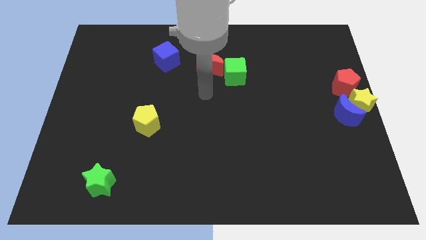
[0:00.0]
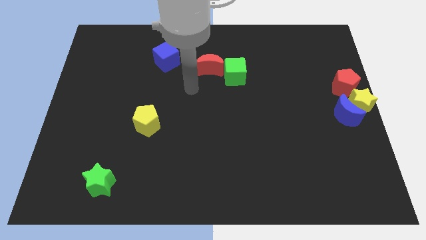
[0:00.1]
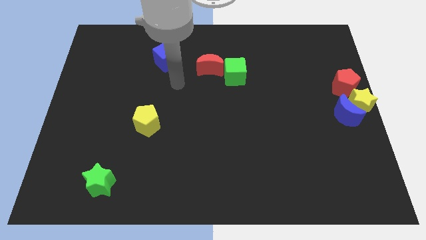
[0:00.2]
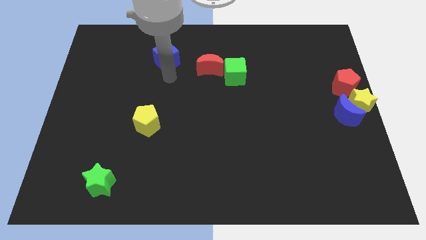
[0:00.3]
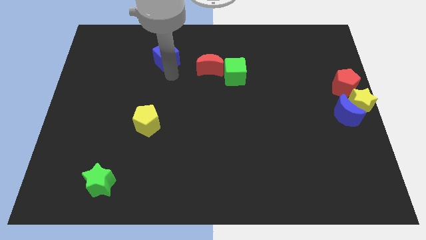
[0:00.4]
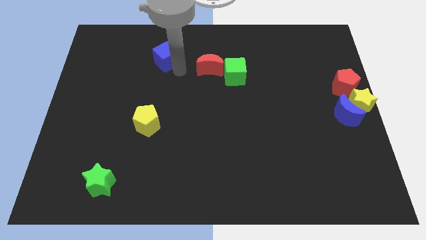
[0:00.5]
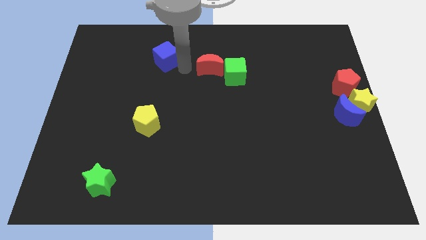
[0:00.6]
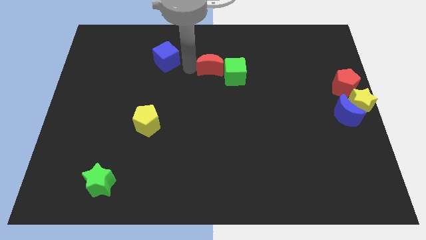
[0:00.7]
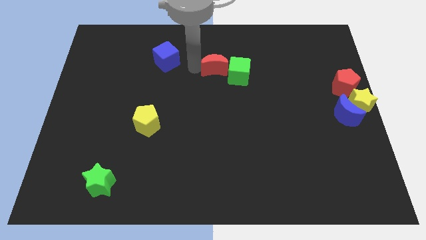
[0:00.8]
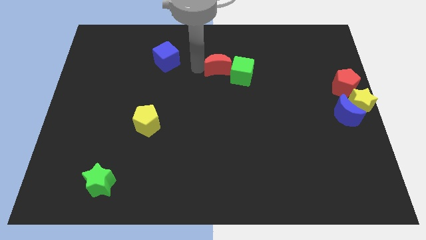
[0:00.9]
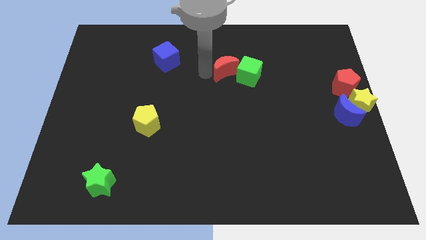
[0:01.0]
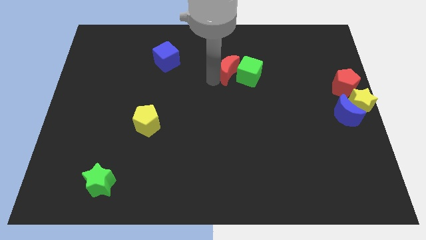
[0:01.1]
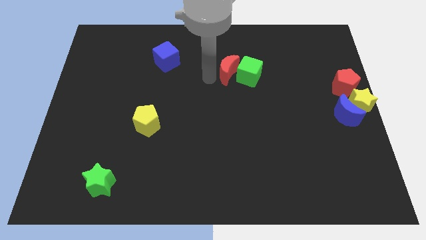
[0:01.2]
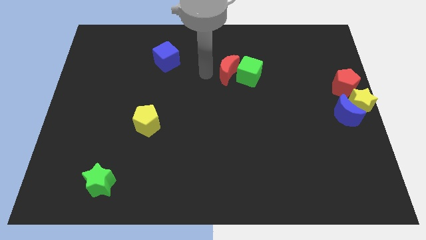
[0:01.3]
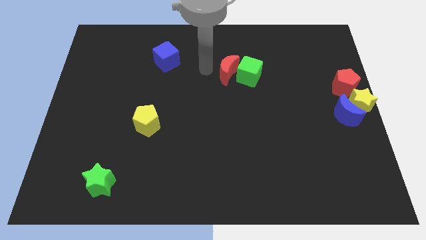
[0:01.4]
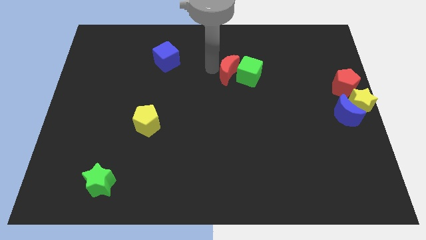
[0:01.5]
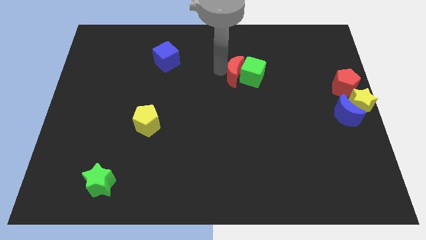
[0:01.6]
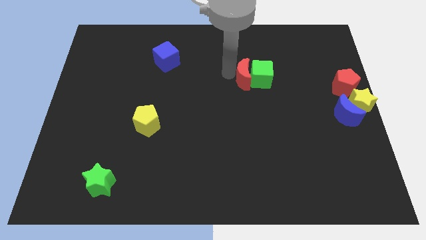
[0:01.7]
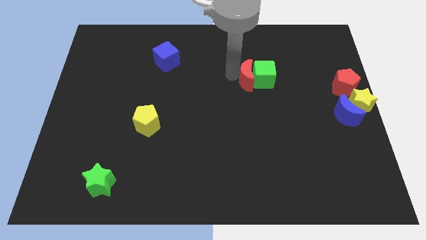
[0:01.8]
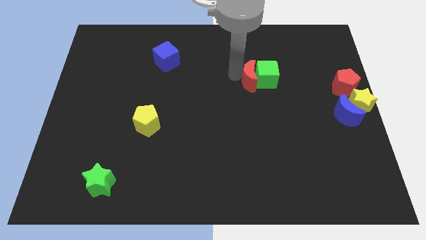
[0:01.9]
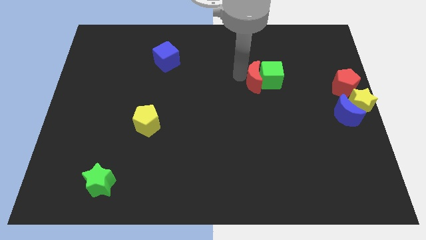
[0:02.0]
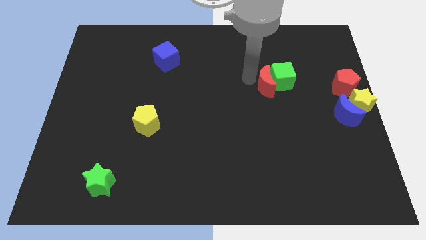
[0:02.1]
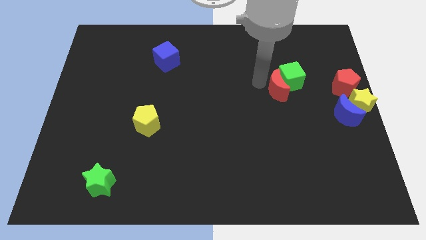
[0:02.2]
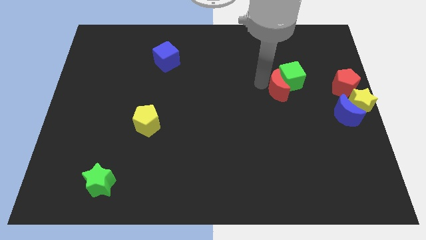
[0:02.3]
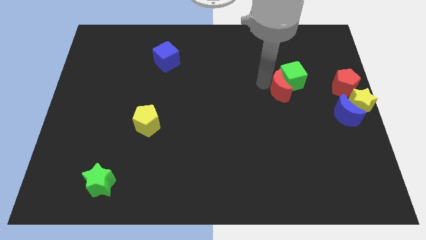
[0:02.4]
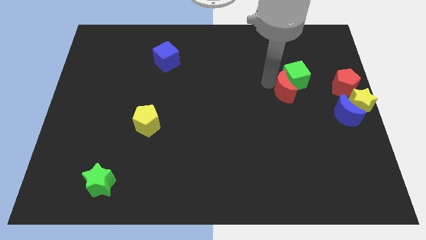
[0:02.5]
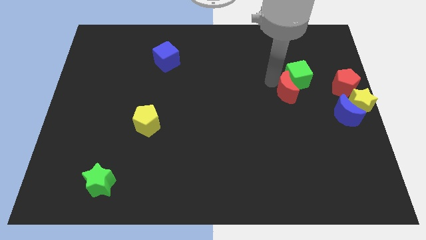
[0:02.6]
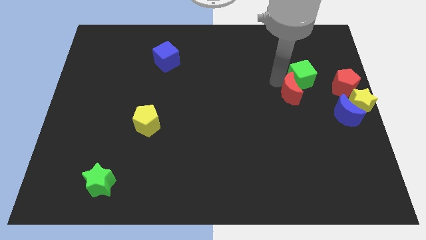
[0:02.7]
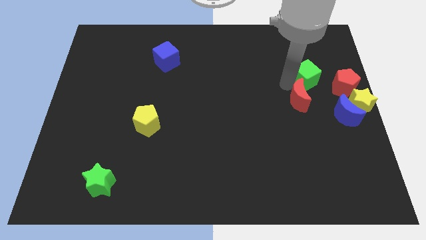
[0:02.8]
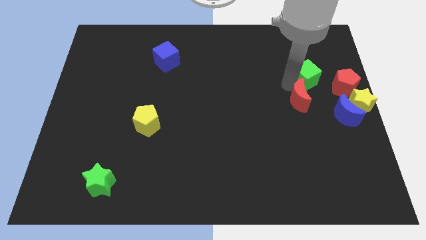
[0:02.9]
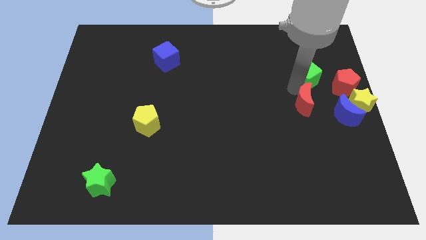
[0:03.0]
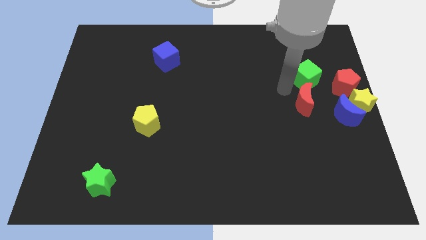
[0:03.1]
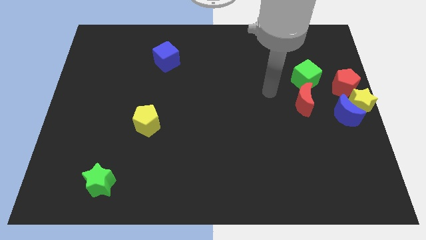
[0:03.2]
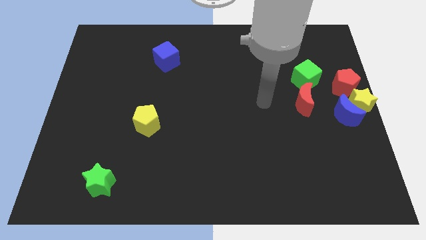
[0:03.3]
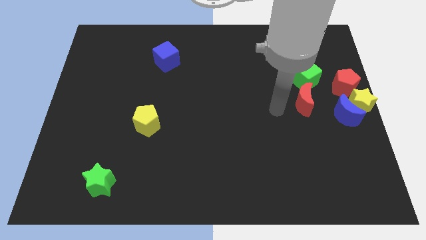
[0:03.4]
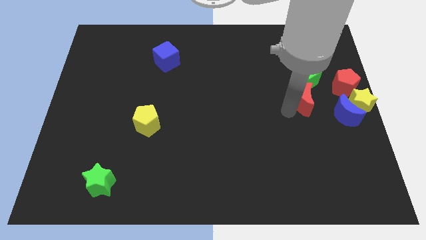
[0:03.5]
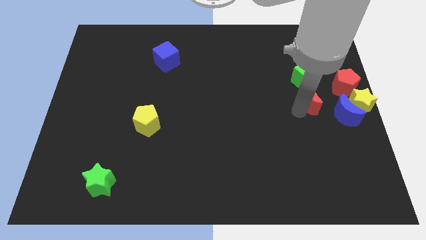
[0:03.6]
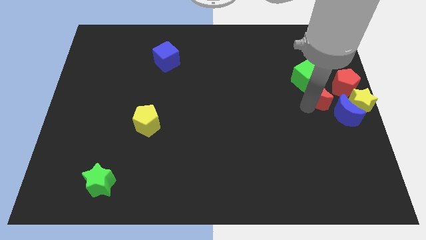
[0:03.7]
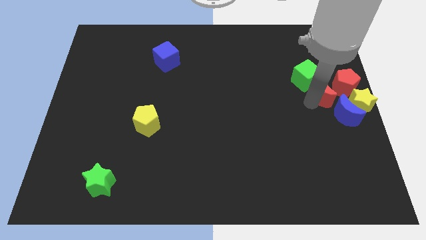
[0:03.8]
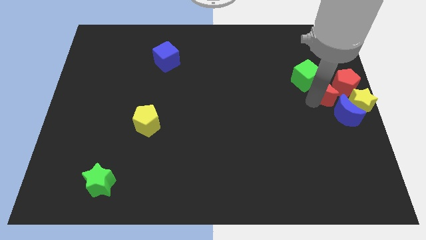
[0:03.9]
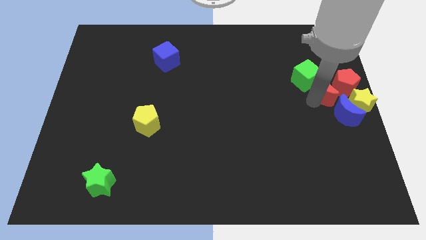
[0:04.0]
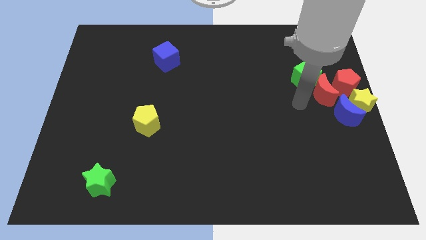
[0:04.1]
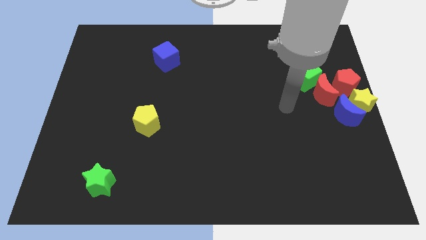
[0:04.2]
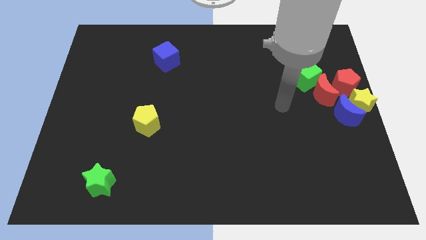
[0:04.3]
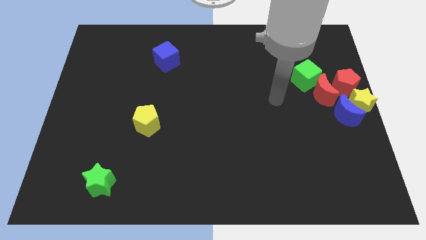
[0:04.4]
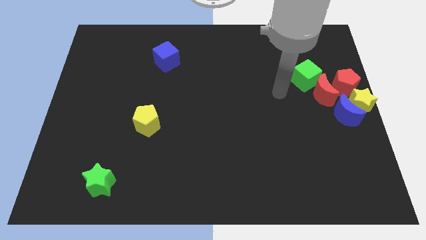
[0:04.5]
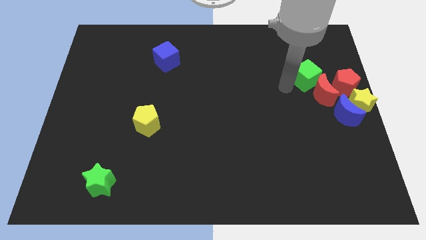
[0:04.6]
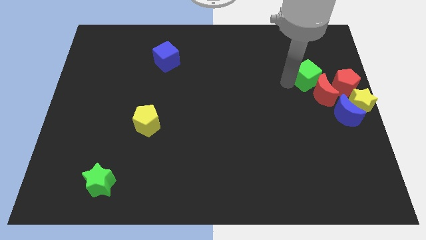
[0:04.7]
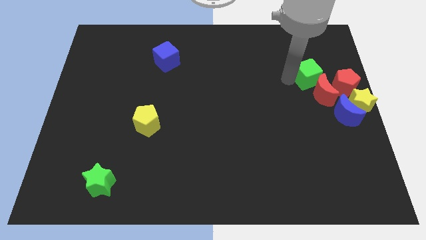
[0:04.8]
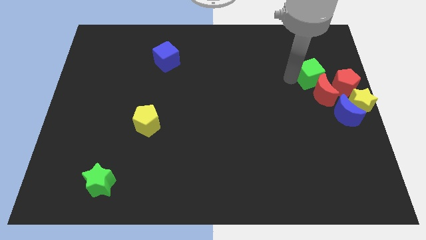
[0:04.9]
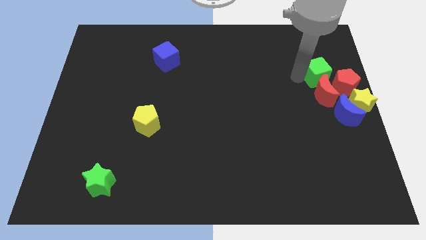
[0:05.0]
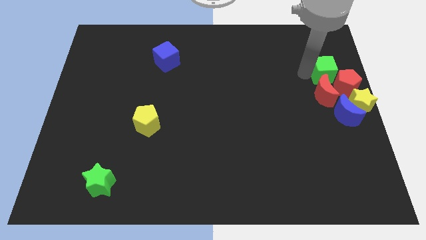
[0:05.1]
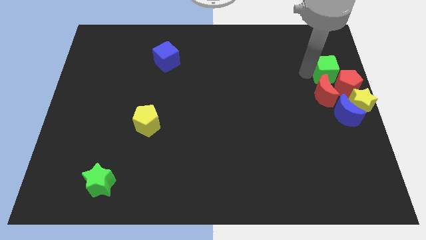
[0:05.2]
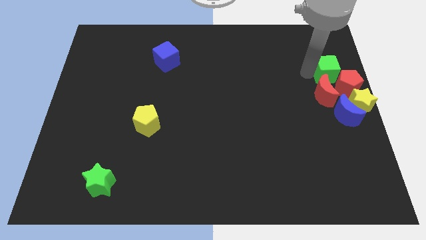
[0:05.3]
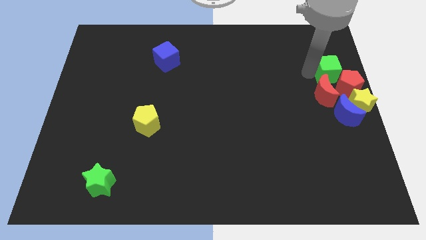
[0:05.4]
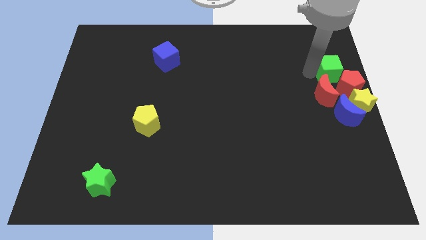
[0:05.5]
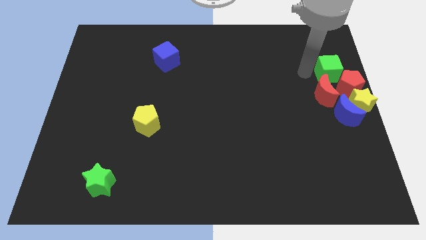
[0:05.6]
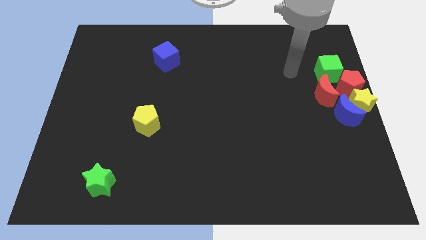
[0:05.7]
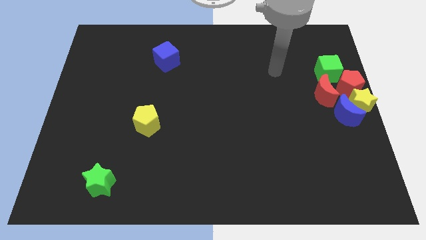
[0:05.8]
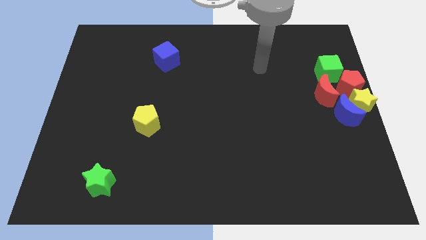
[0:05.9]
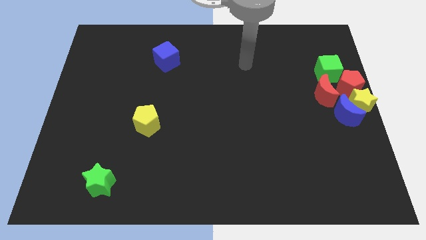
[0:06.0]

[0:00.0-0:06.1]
move the red crescent and the green cube to the red pentagon

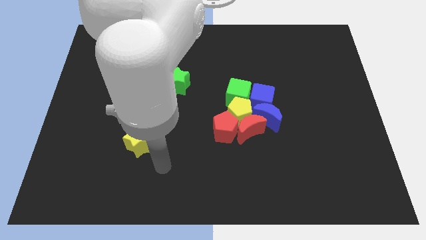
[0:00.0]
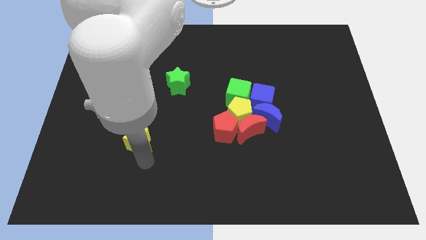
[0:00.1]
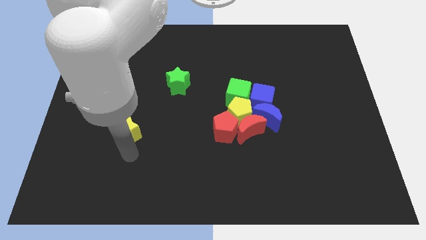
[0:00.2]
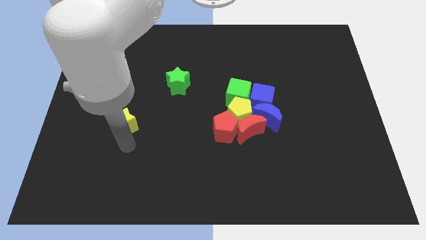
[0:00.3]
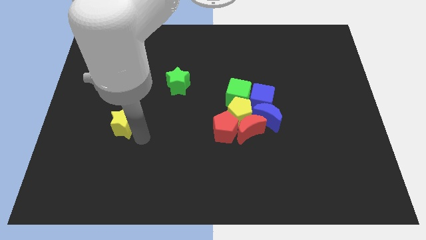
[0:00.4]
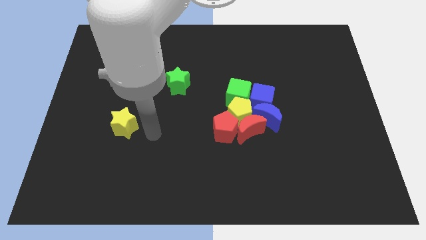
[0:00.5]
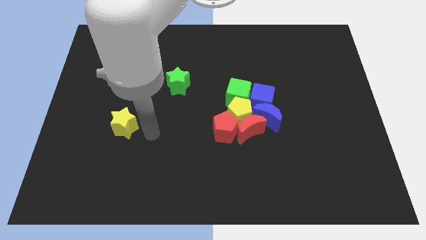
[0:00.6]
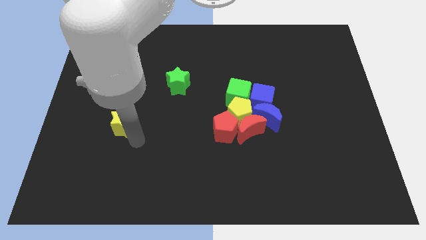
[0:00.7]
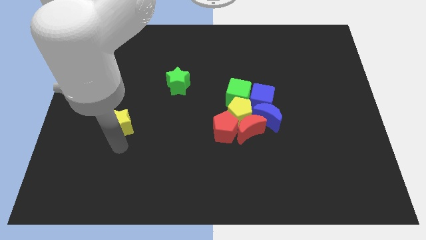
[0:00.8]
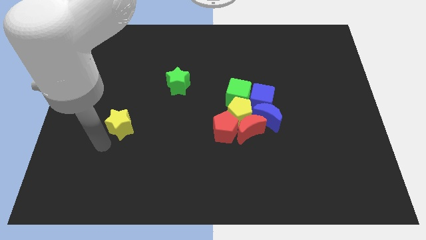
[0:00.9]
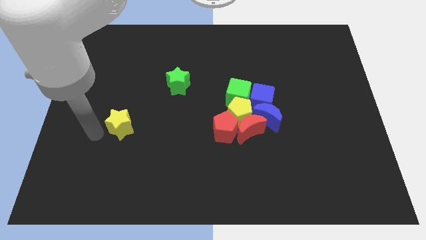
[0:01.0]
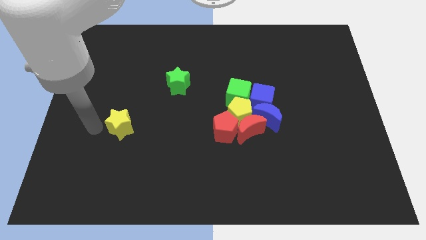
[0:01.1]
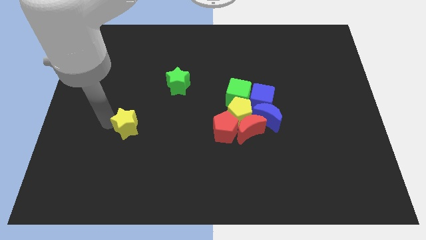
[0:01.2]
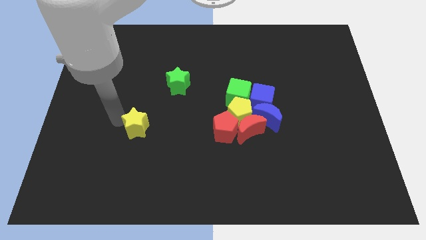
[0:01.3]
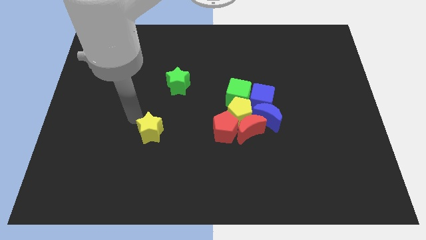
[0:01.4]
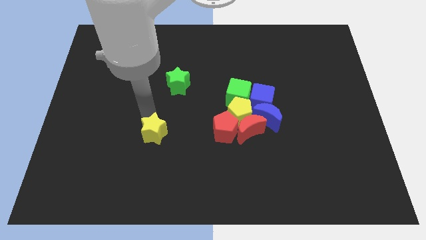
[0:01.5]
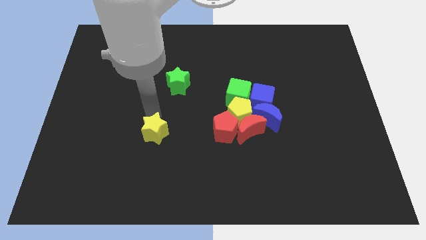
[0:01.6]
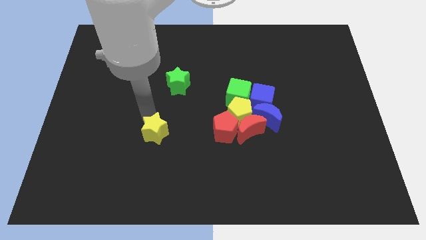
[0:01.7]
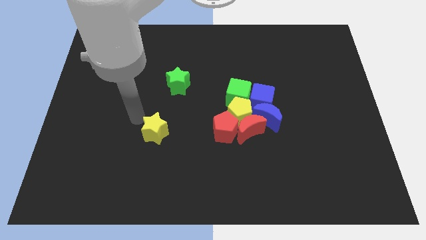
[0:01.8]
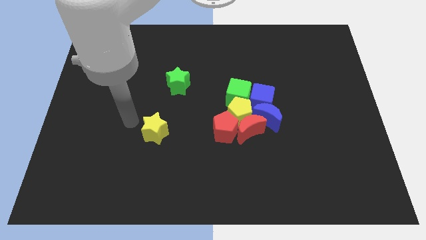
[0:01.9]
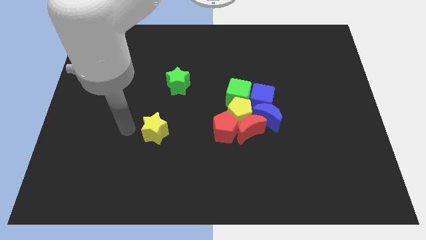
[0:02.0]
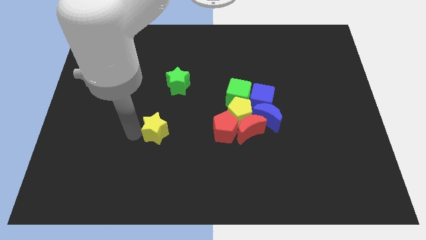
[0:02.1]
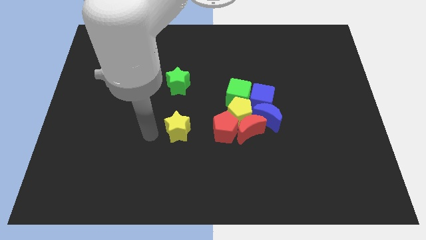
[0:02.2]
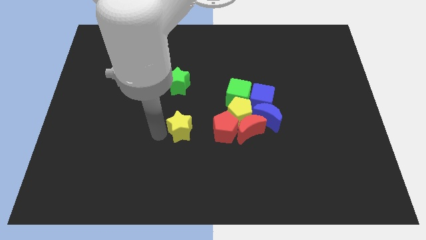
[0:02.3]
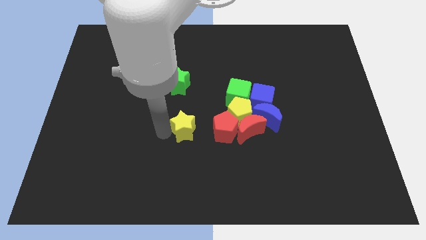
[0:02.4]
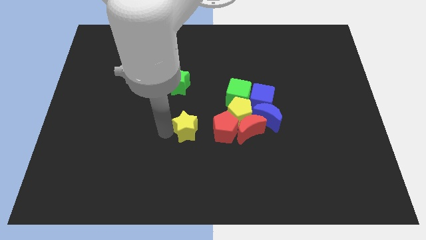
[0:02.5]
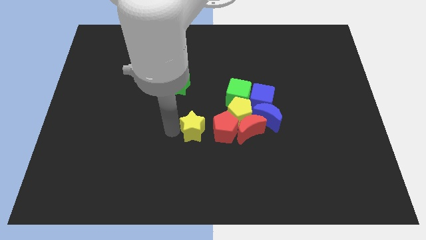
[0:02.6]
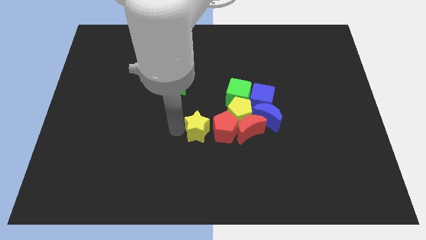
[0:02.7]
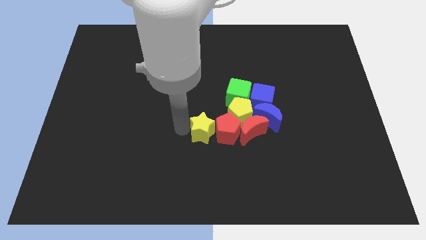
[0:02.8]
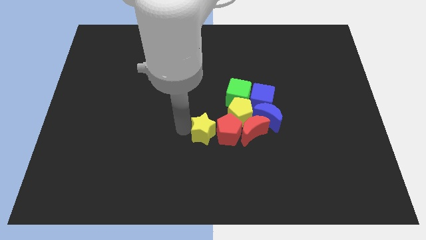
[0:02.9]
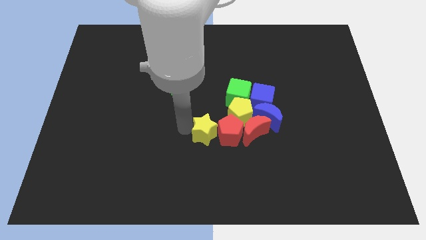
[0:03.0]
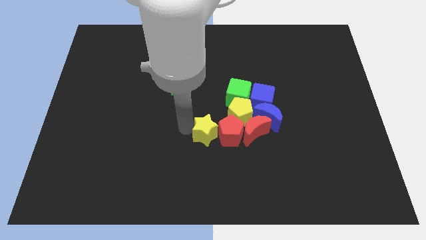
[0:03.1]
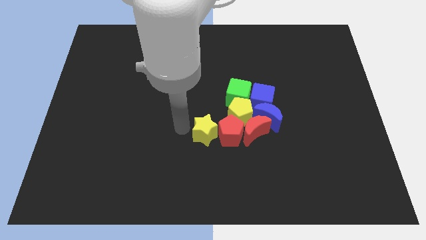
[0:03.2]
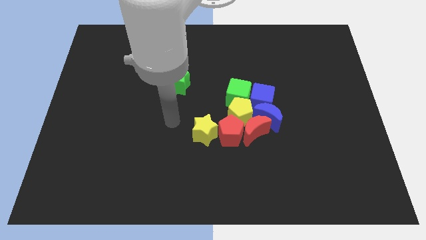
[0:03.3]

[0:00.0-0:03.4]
move the yellow star to the left of the red pentagon
